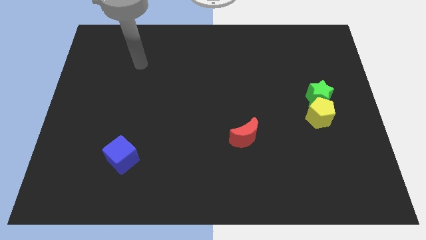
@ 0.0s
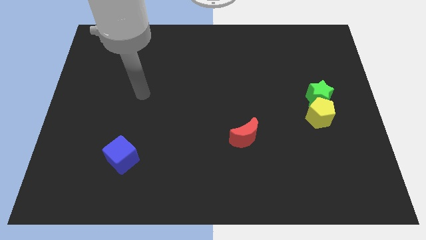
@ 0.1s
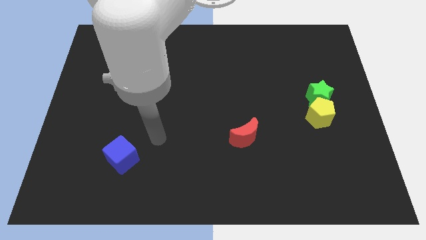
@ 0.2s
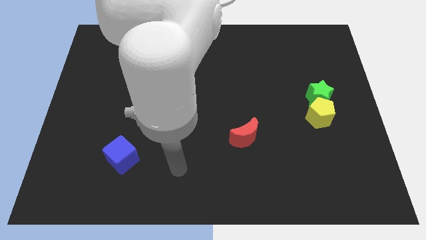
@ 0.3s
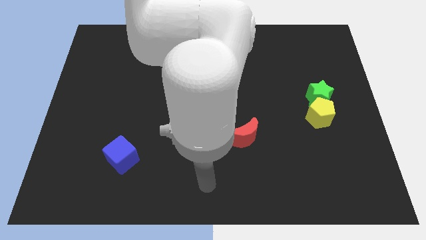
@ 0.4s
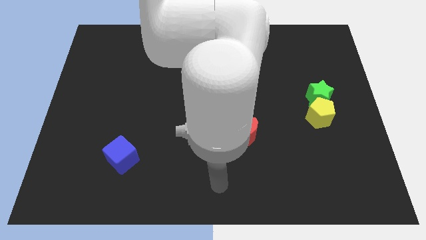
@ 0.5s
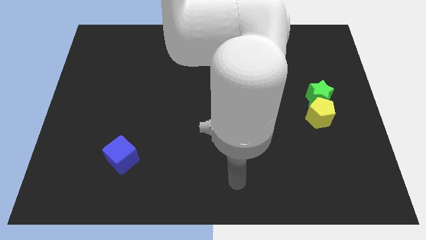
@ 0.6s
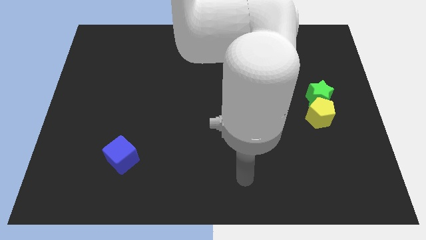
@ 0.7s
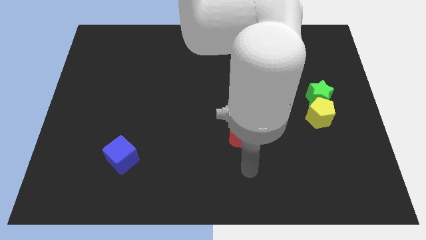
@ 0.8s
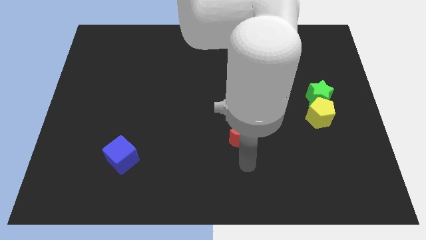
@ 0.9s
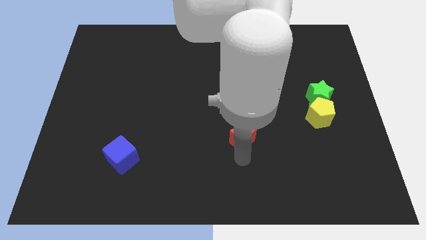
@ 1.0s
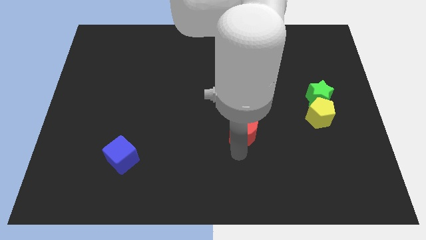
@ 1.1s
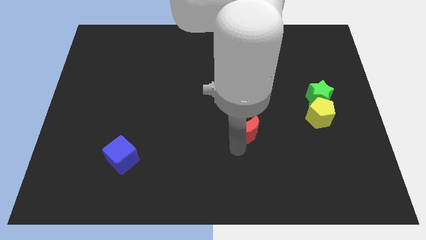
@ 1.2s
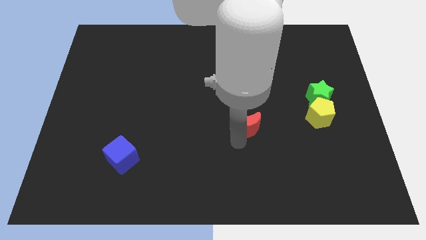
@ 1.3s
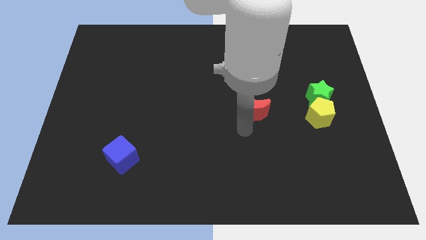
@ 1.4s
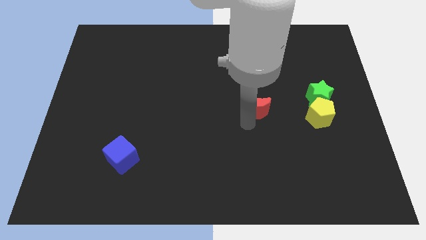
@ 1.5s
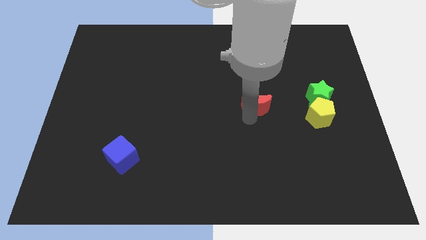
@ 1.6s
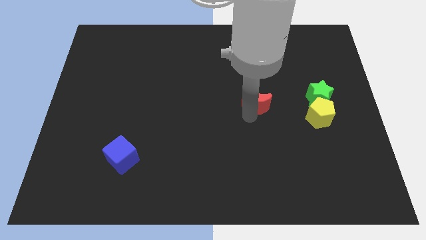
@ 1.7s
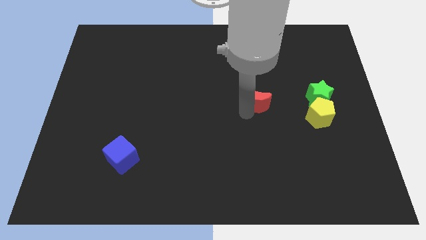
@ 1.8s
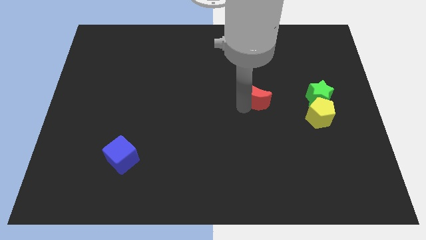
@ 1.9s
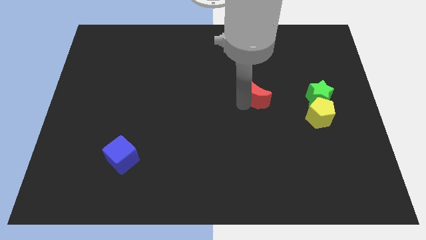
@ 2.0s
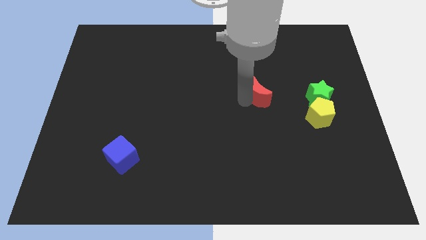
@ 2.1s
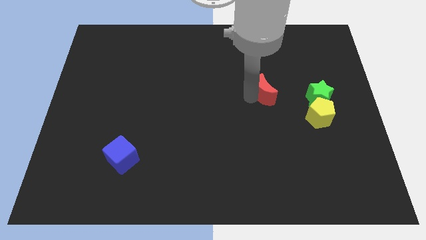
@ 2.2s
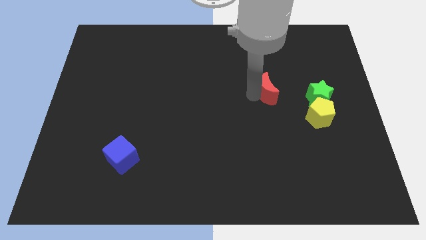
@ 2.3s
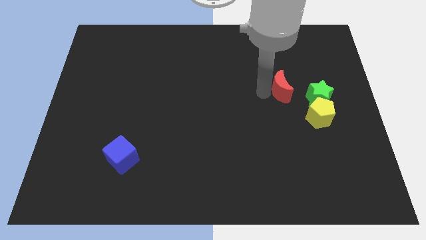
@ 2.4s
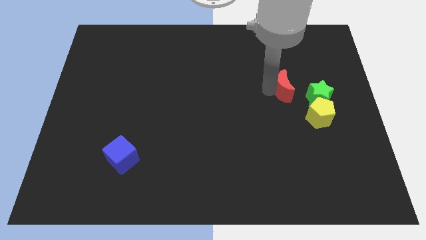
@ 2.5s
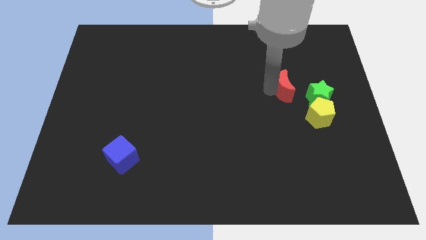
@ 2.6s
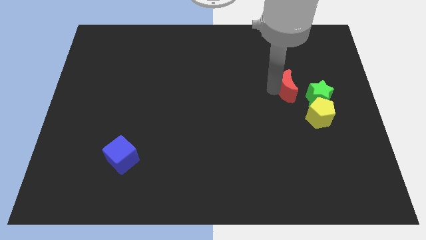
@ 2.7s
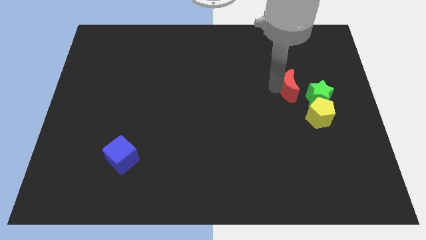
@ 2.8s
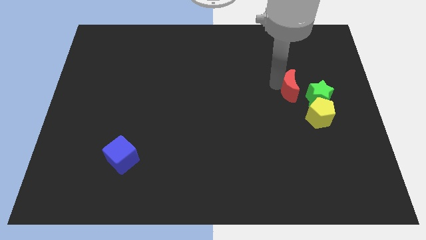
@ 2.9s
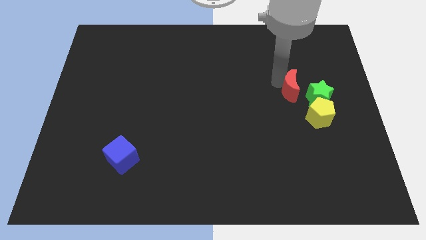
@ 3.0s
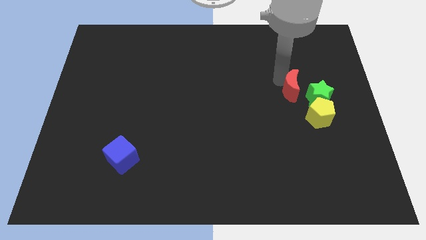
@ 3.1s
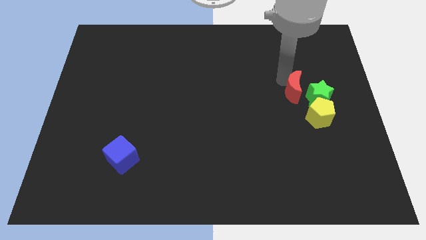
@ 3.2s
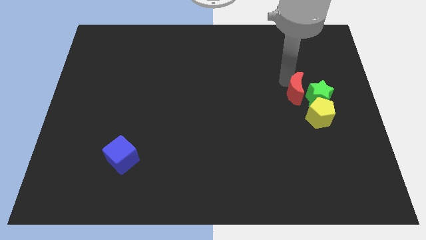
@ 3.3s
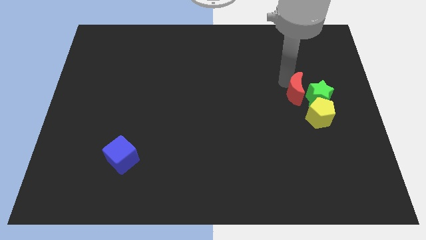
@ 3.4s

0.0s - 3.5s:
put the red block next to the green block

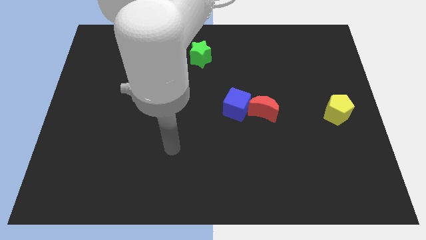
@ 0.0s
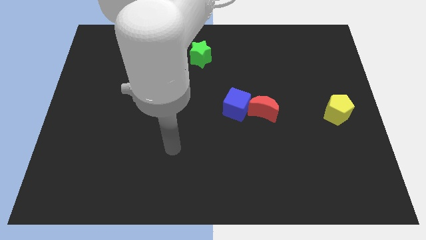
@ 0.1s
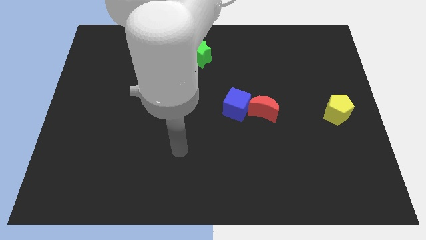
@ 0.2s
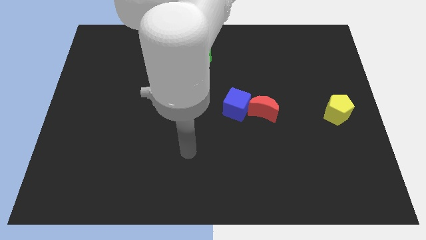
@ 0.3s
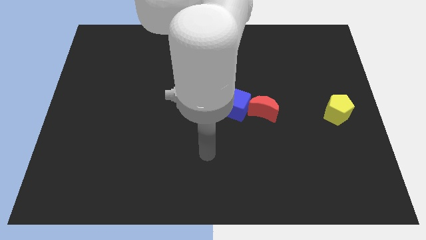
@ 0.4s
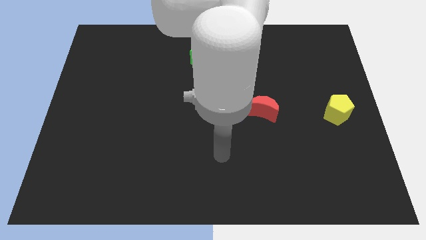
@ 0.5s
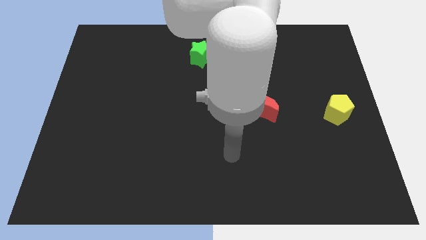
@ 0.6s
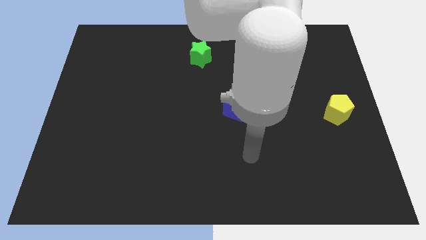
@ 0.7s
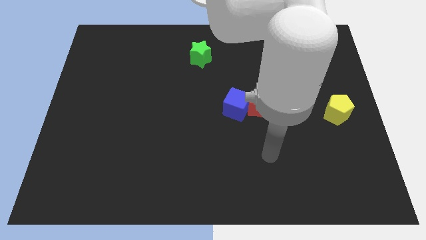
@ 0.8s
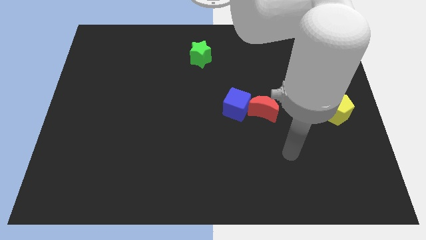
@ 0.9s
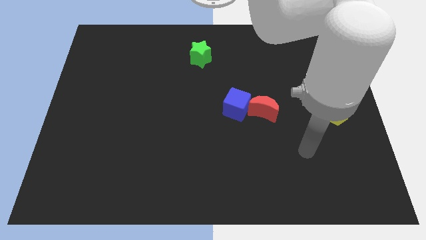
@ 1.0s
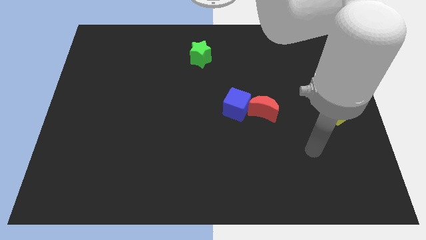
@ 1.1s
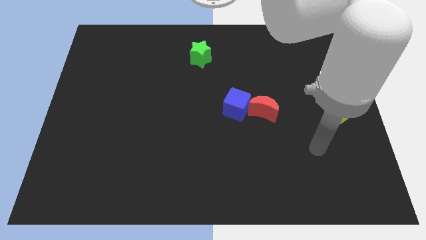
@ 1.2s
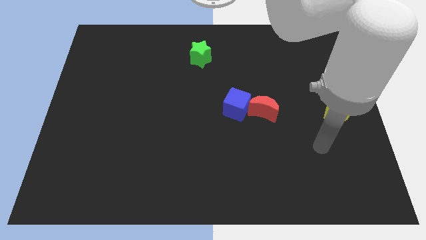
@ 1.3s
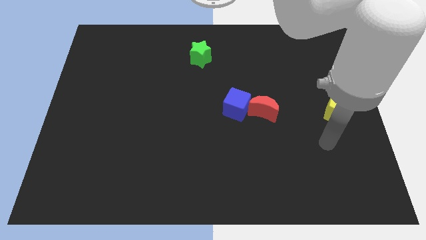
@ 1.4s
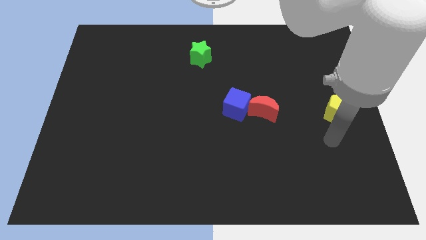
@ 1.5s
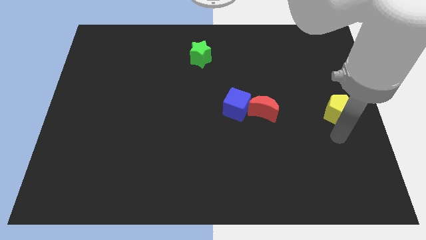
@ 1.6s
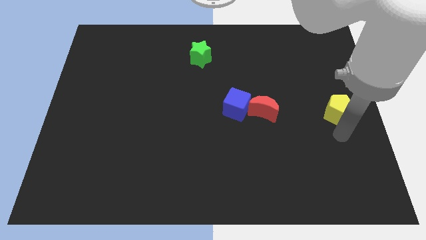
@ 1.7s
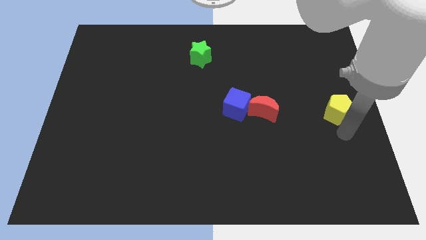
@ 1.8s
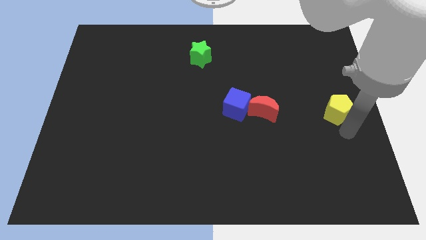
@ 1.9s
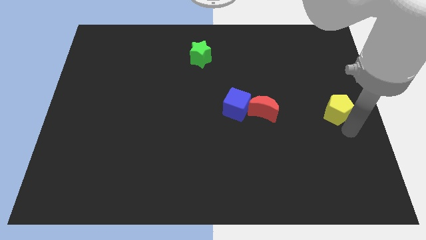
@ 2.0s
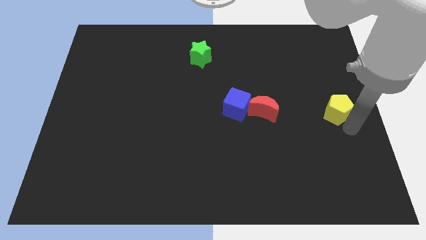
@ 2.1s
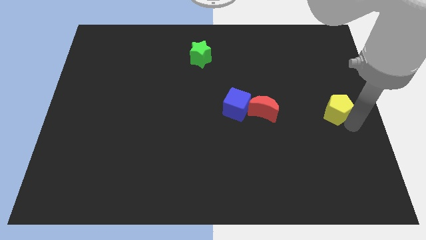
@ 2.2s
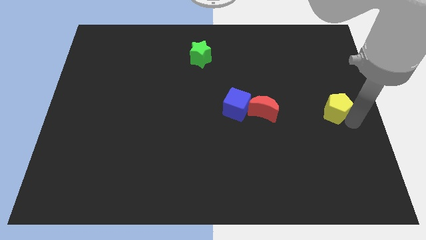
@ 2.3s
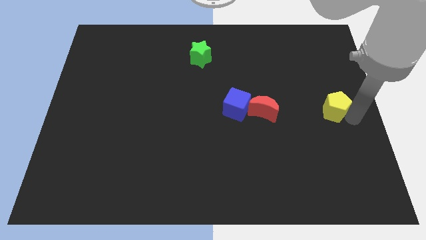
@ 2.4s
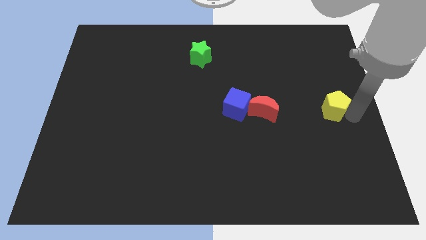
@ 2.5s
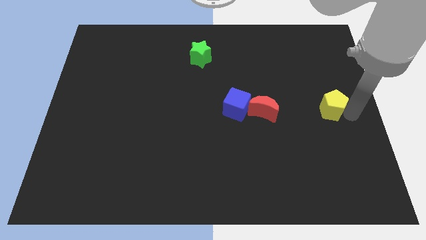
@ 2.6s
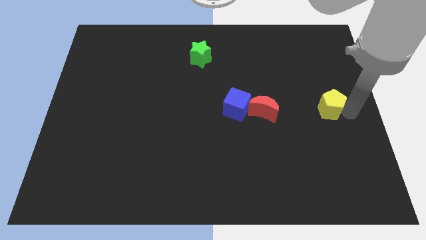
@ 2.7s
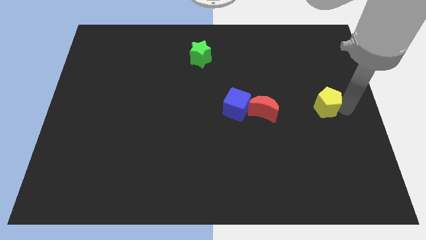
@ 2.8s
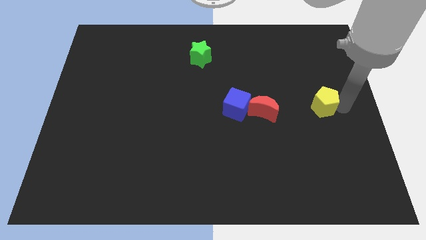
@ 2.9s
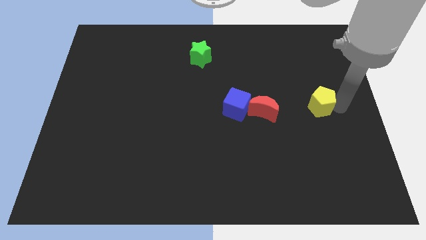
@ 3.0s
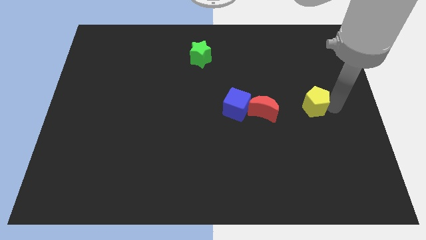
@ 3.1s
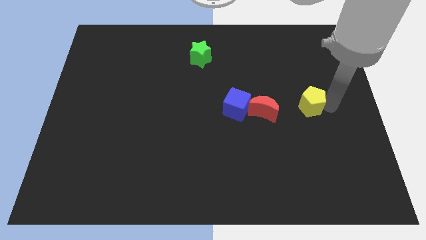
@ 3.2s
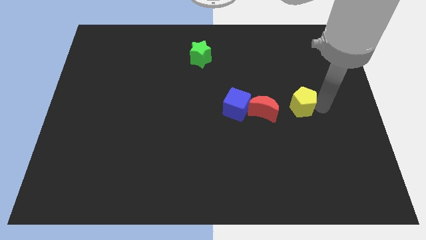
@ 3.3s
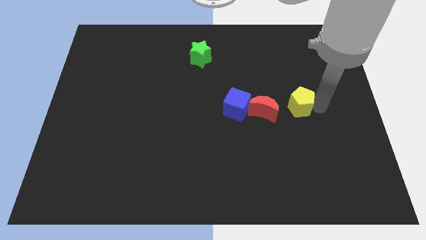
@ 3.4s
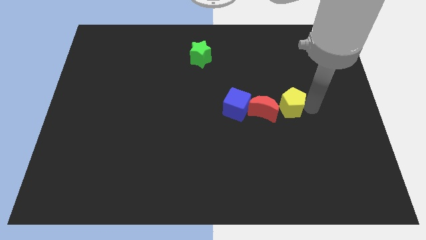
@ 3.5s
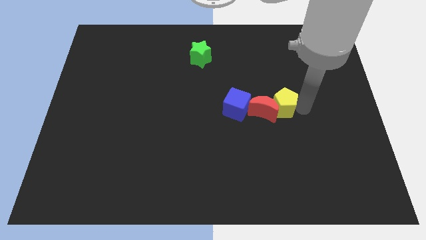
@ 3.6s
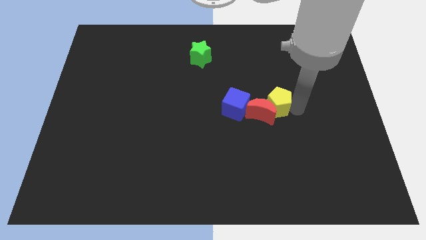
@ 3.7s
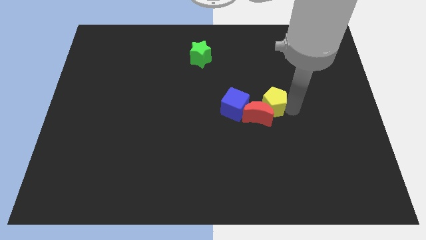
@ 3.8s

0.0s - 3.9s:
put the pentagon close to the moon

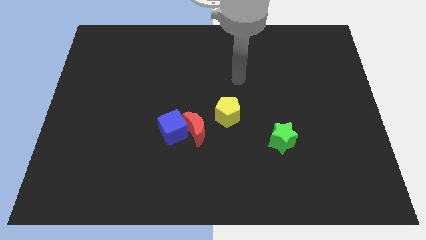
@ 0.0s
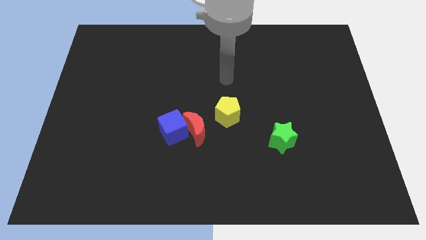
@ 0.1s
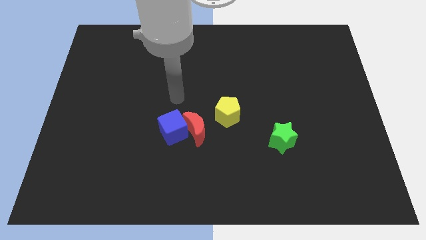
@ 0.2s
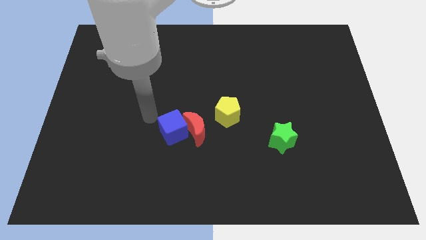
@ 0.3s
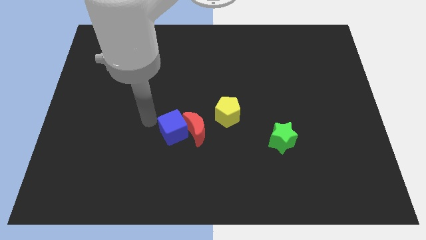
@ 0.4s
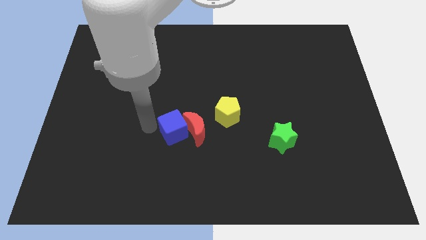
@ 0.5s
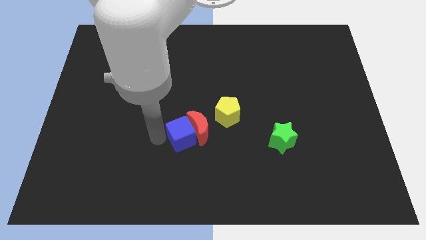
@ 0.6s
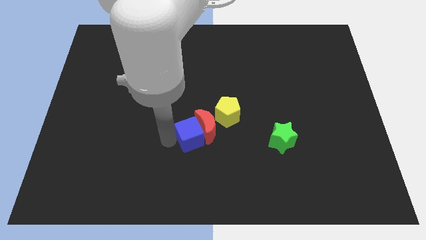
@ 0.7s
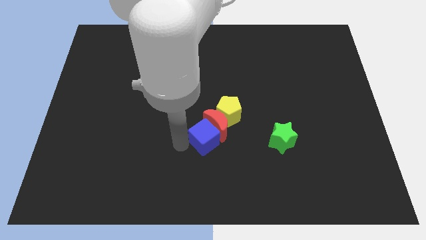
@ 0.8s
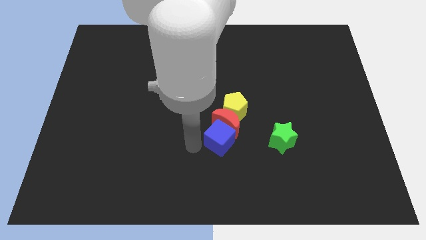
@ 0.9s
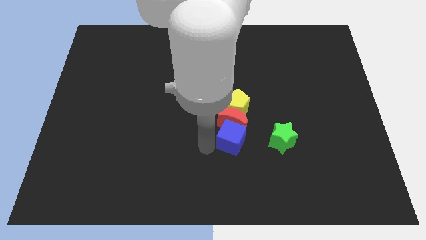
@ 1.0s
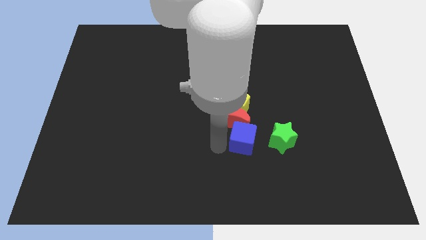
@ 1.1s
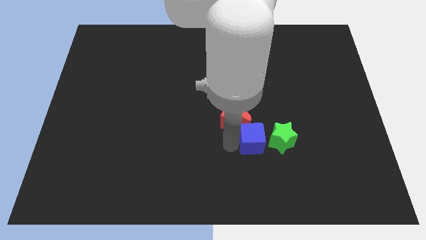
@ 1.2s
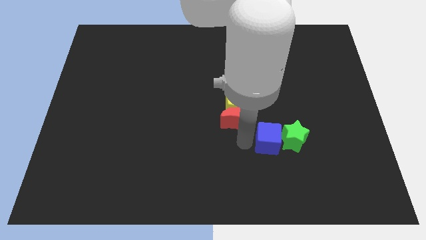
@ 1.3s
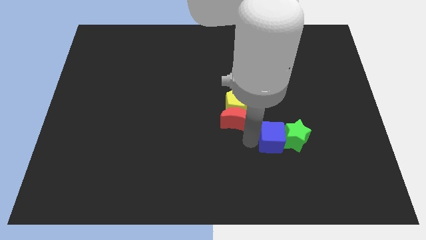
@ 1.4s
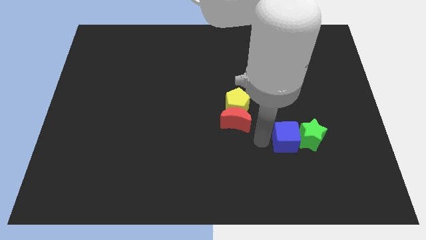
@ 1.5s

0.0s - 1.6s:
put the cube close to the star
